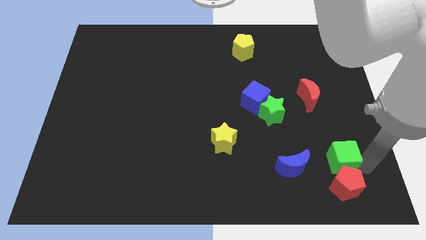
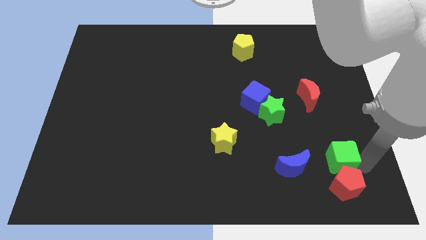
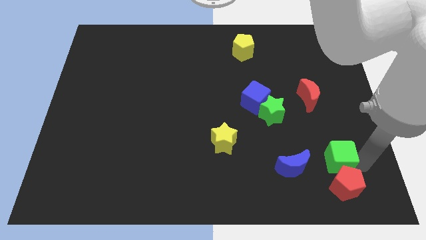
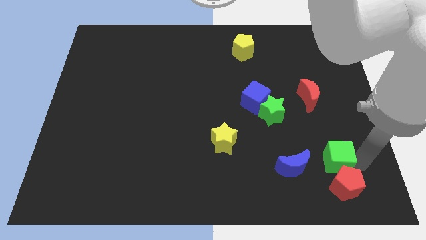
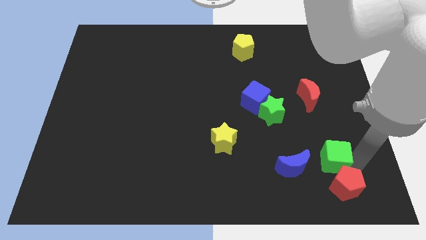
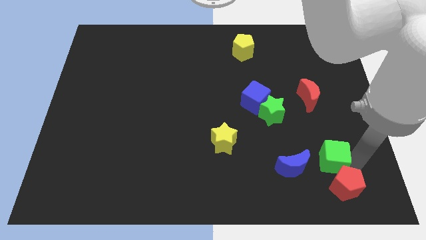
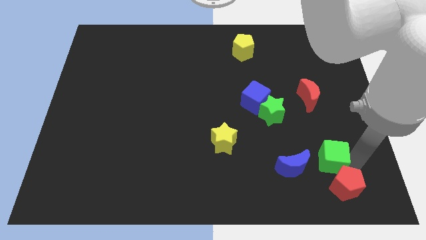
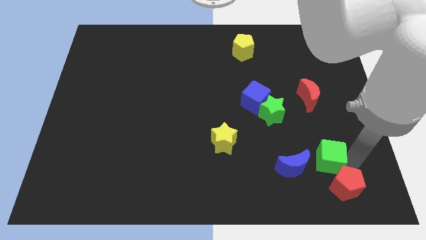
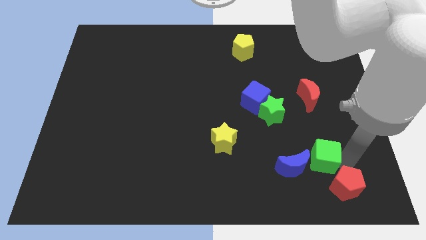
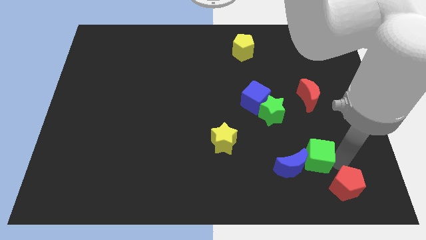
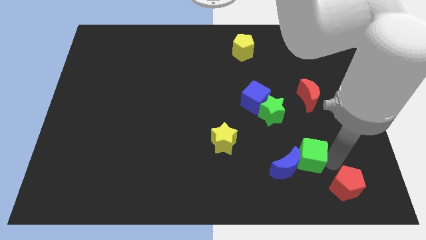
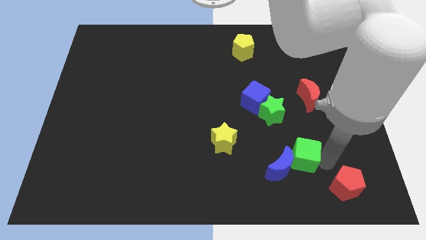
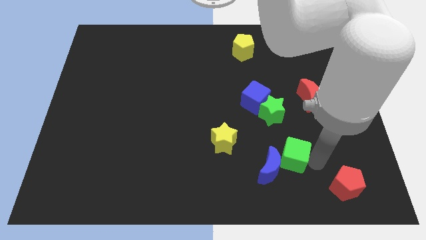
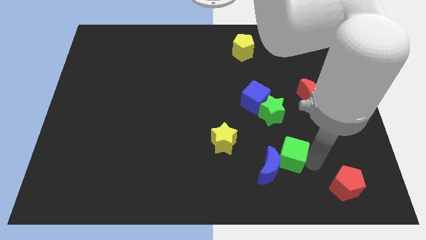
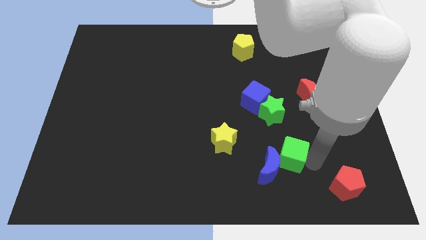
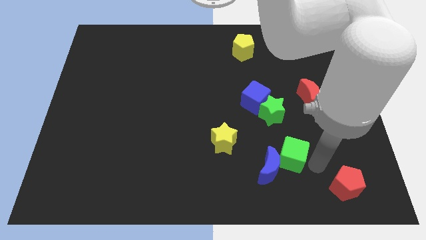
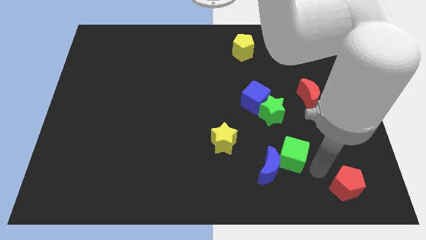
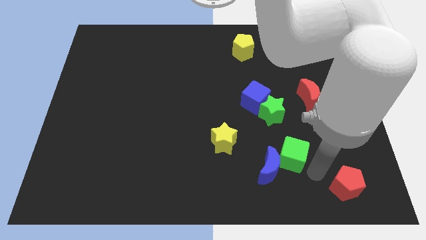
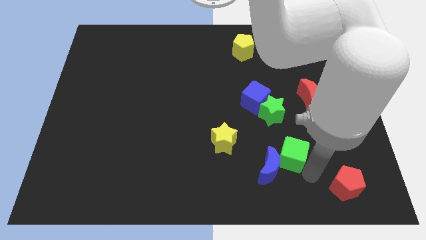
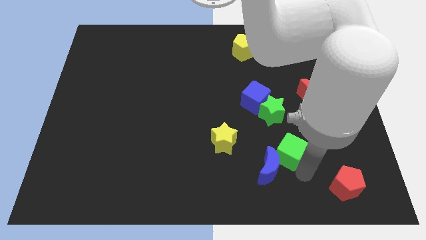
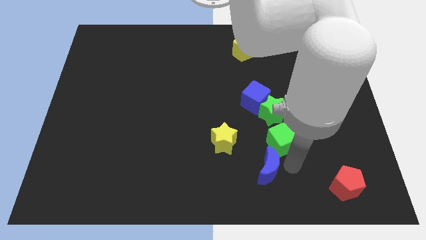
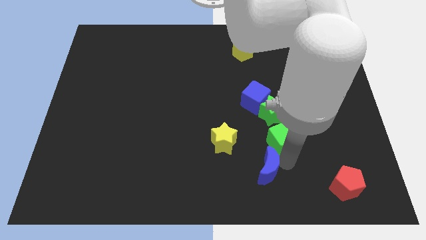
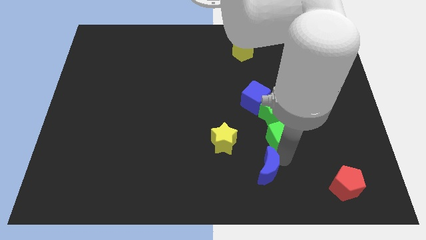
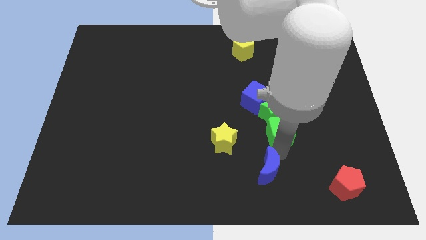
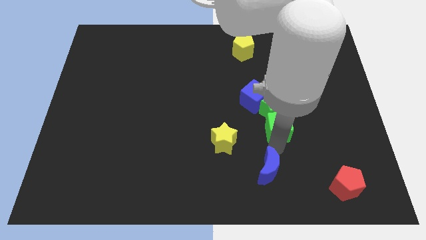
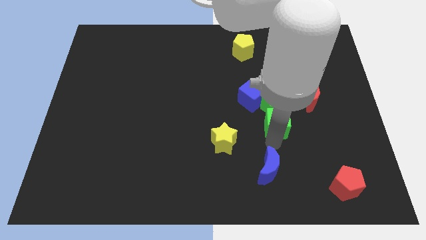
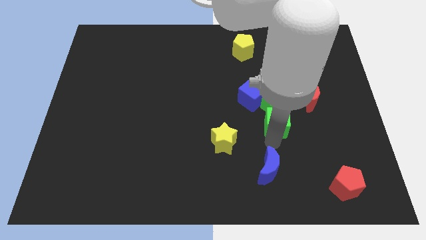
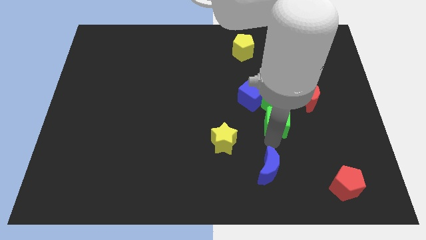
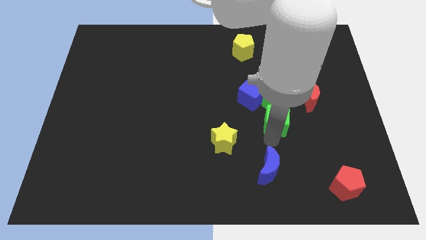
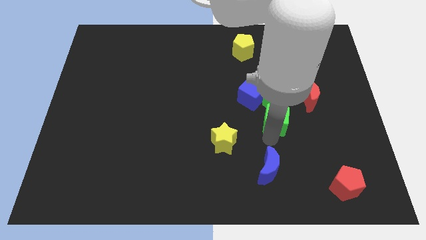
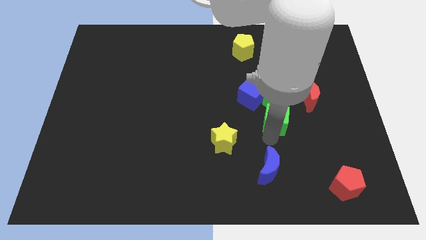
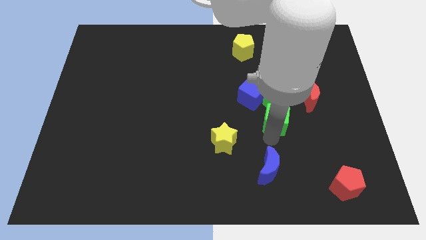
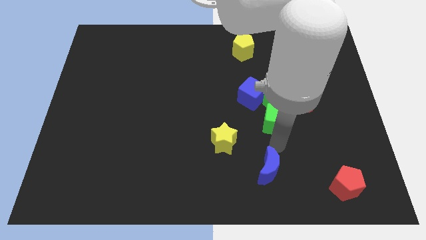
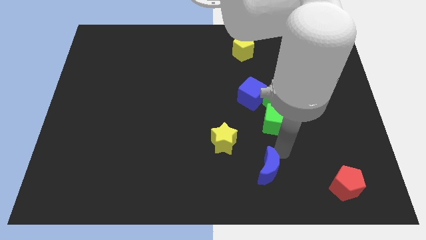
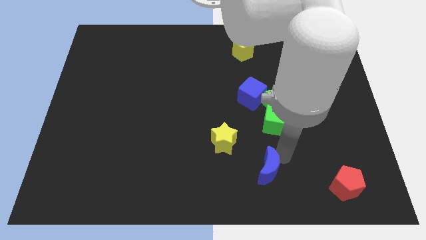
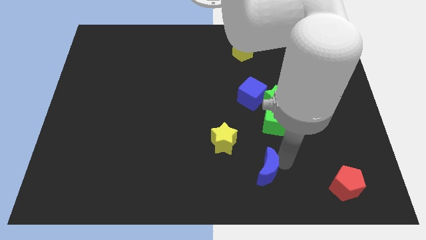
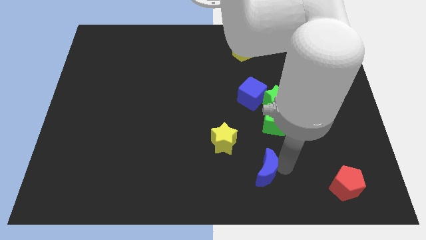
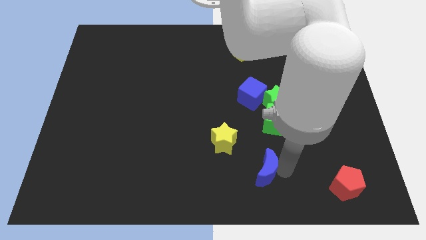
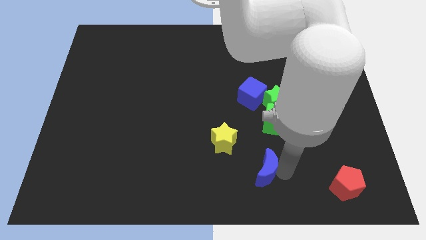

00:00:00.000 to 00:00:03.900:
move green cube below the green star

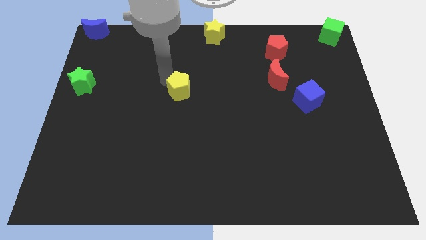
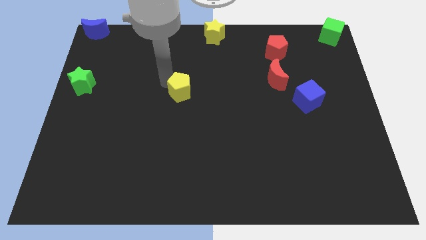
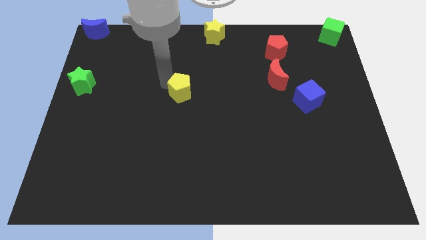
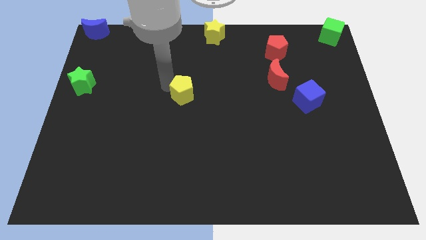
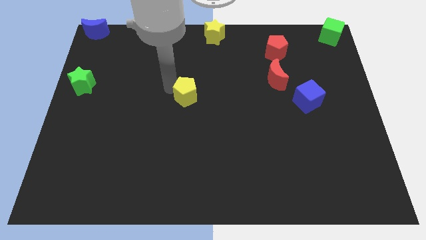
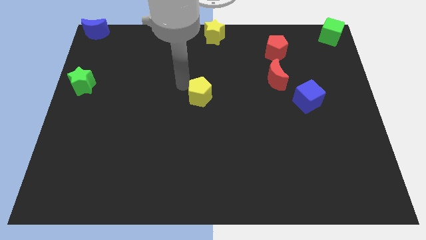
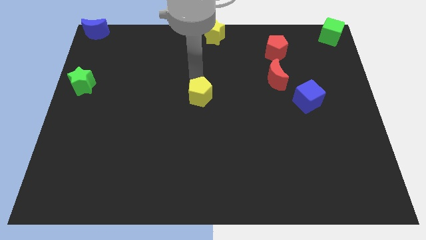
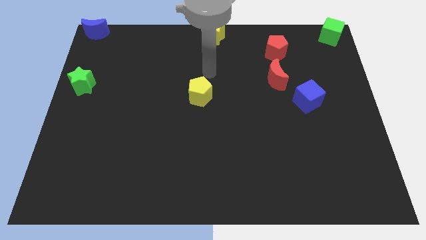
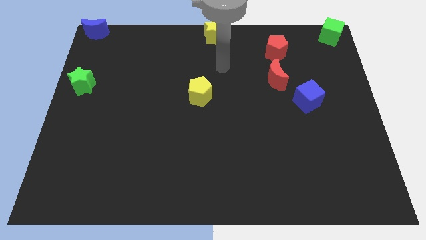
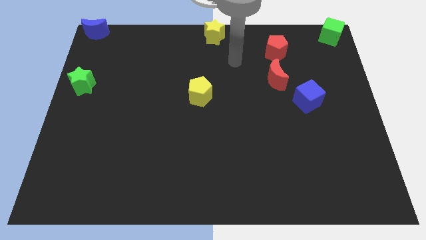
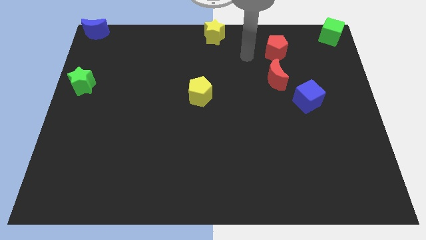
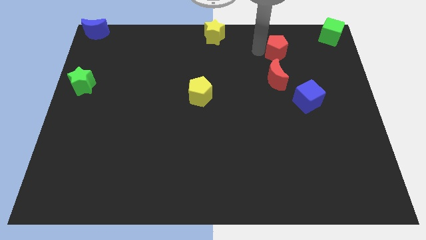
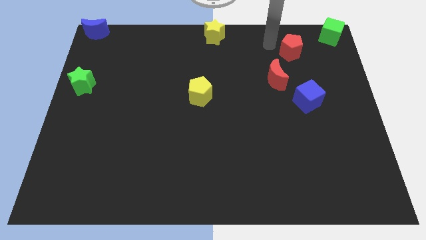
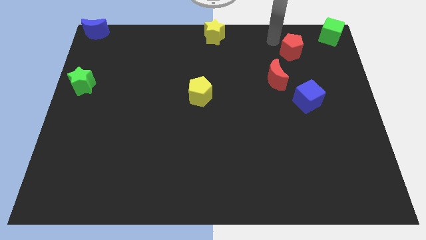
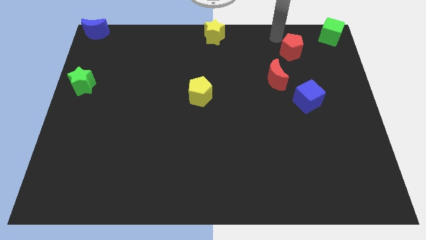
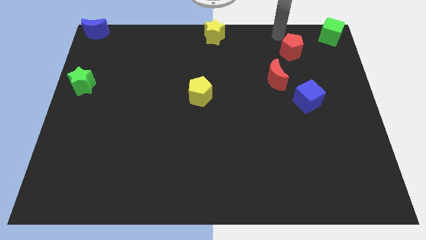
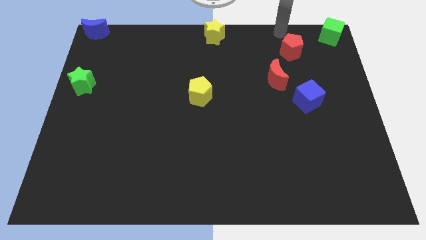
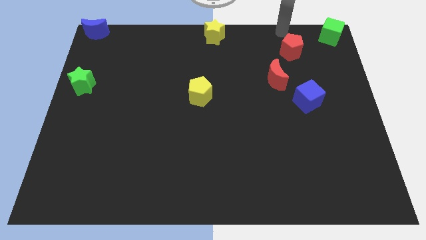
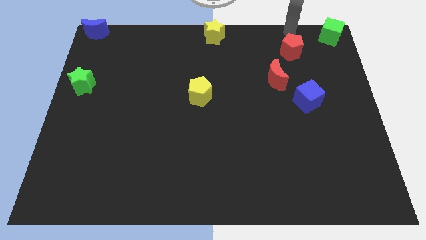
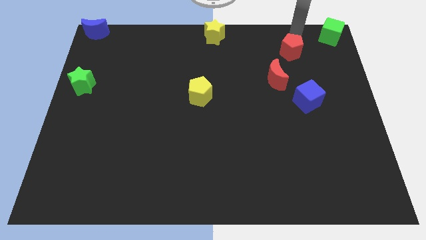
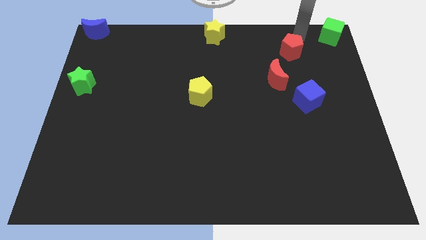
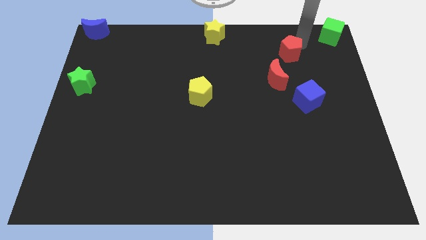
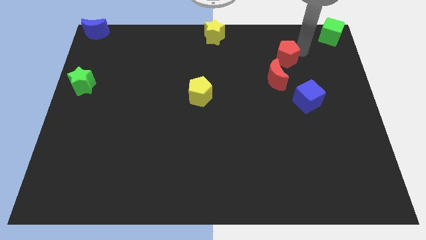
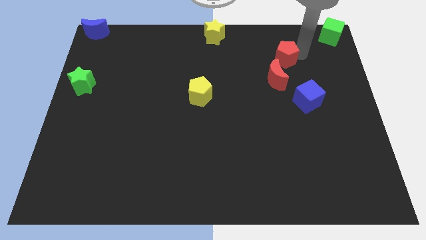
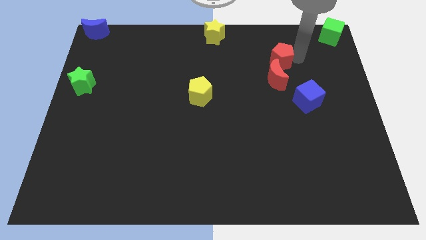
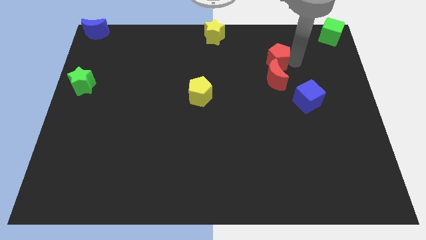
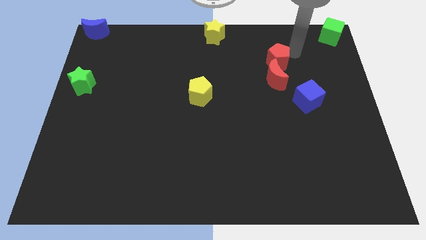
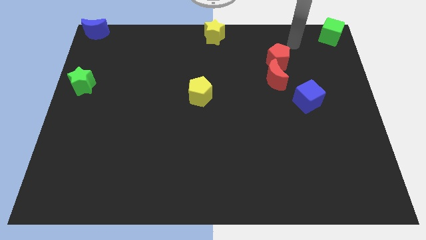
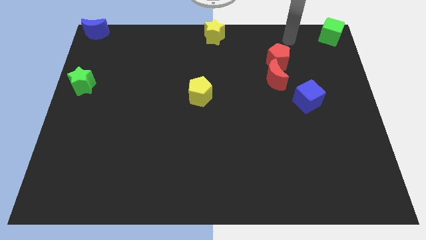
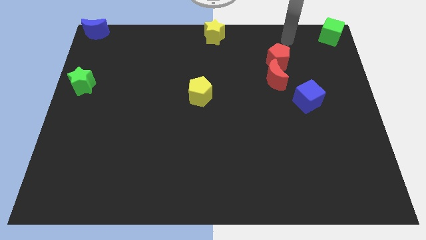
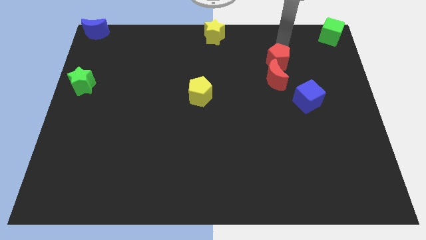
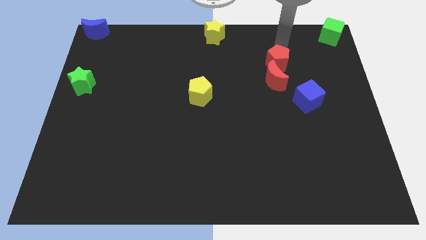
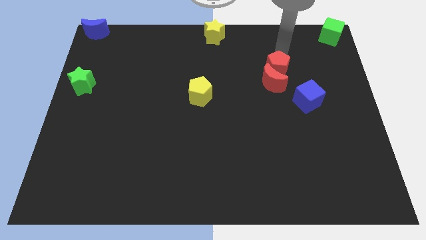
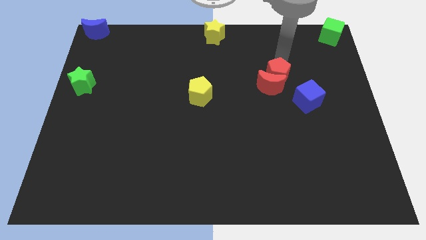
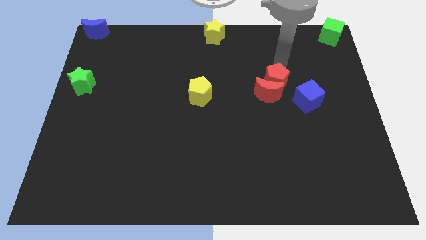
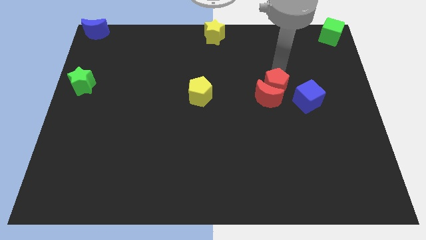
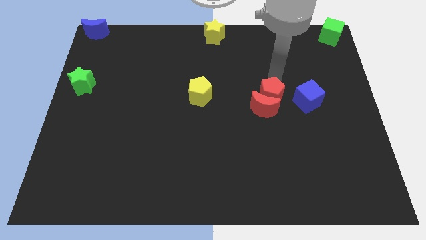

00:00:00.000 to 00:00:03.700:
push the red pentagon into the red moon

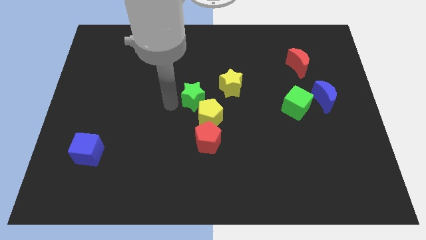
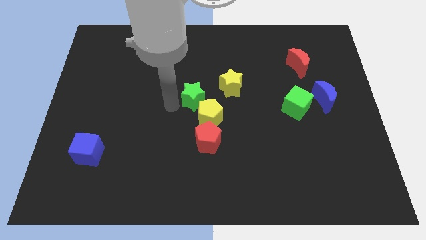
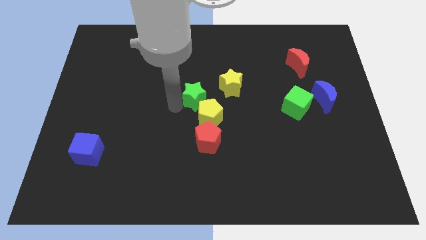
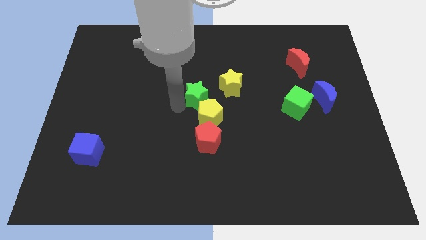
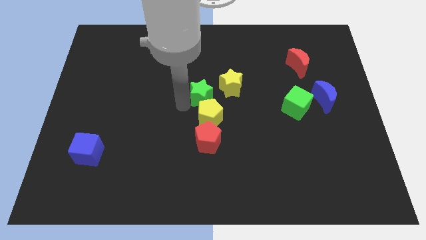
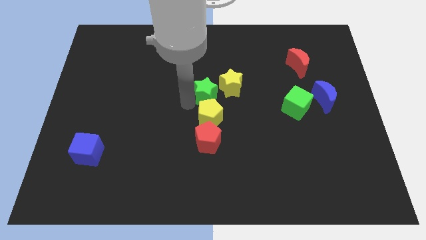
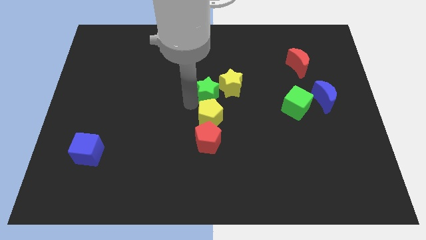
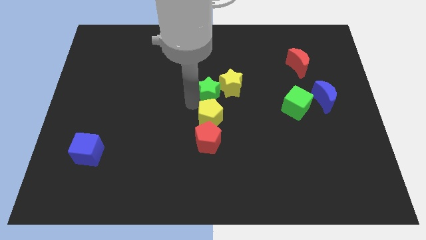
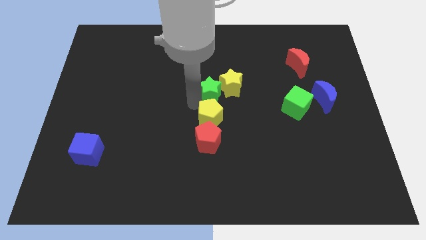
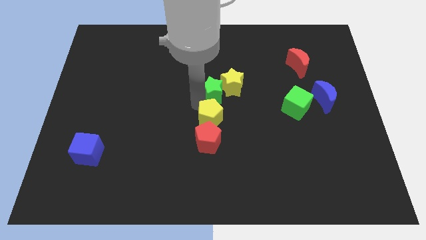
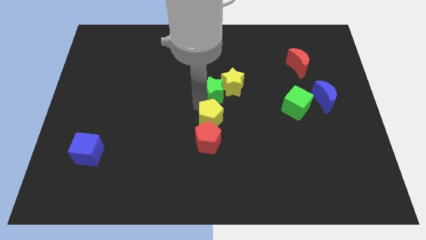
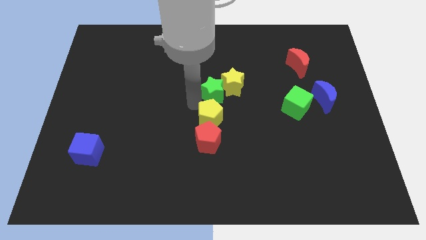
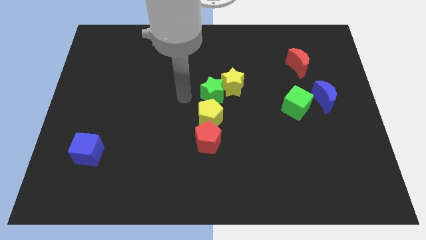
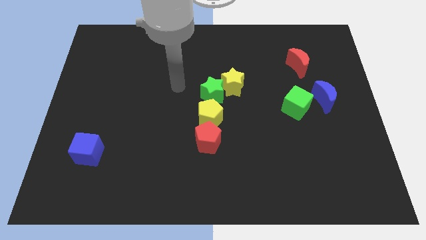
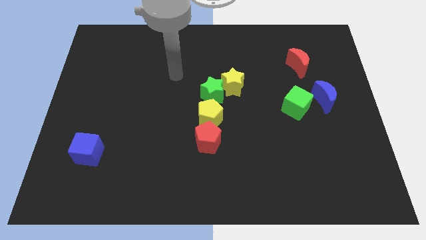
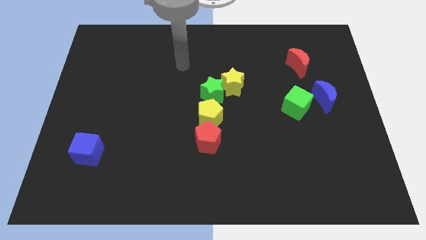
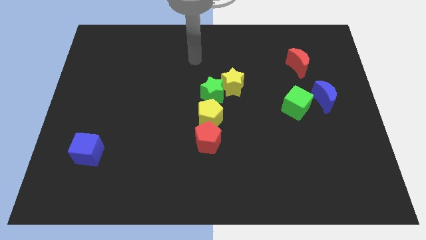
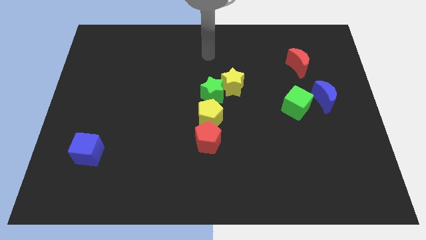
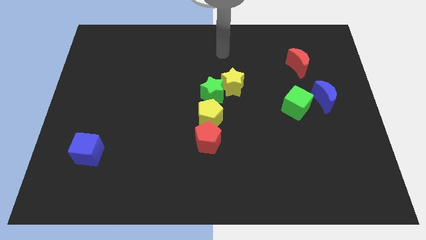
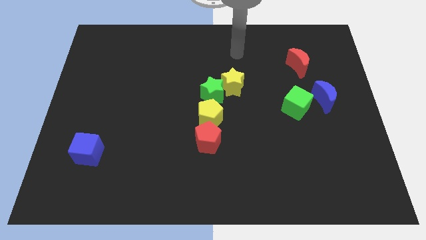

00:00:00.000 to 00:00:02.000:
move the green star left beside the yellow star
